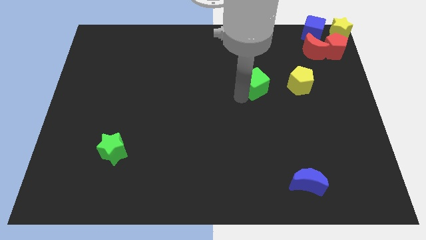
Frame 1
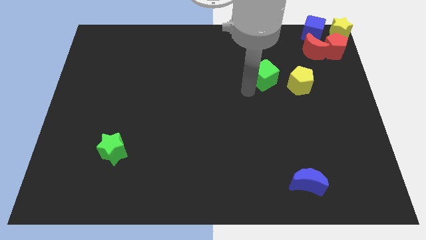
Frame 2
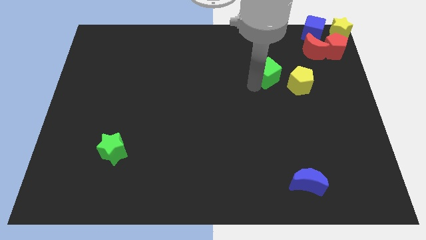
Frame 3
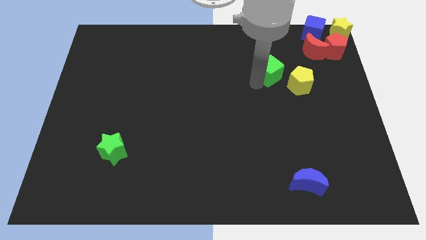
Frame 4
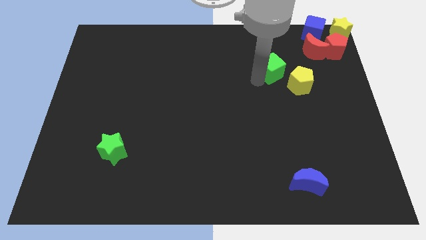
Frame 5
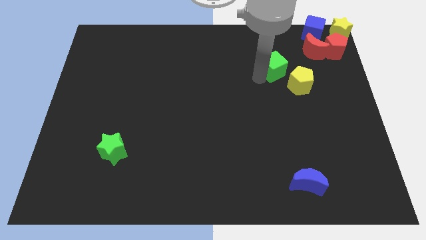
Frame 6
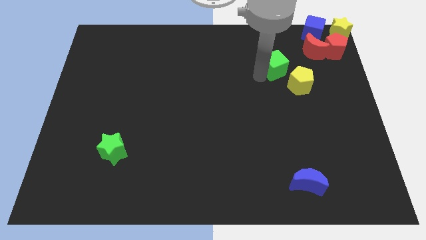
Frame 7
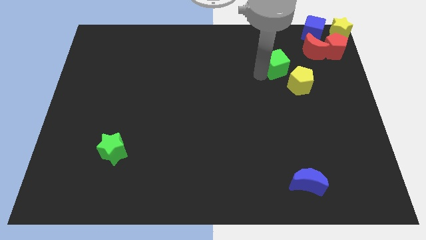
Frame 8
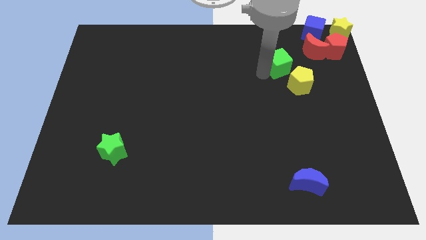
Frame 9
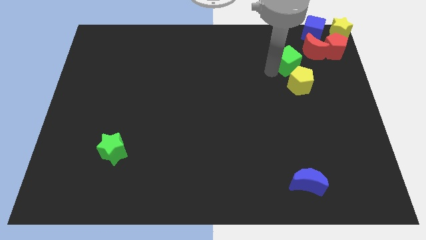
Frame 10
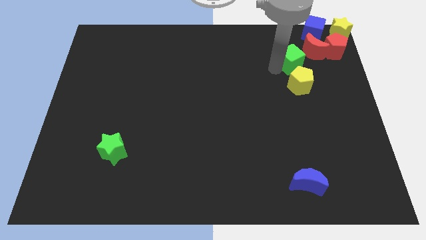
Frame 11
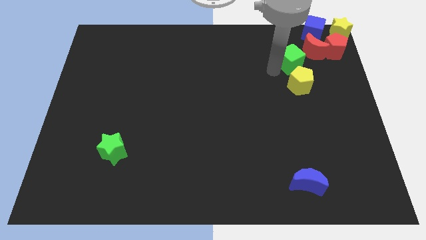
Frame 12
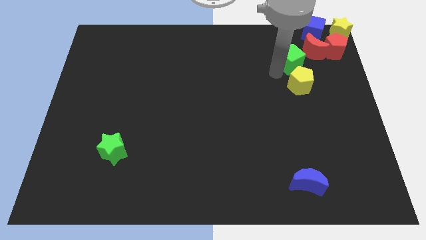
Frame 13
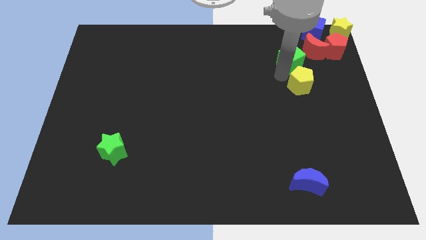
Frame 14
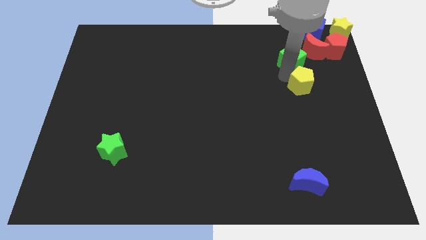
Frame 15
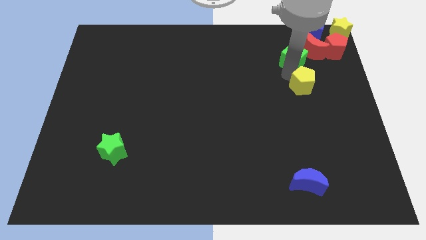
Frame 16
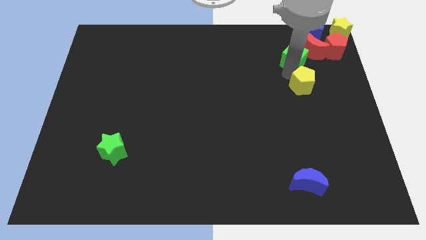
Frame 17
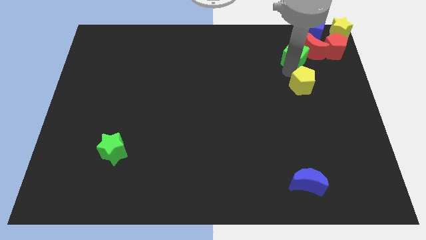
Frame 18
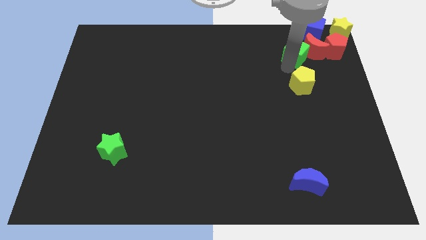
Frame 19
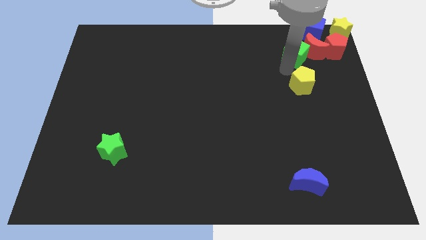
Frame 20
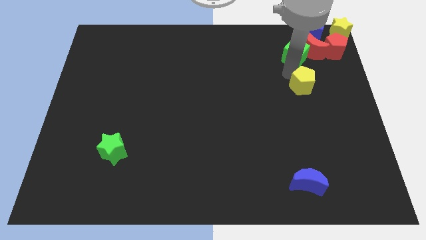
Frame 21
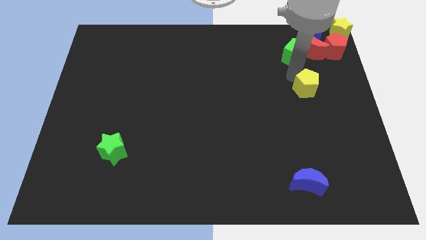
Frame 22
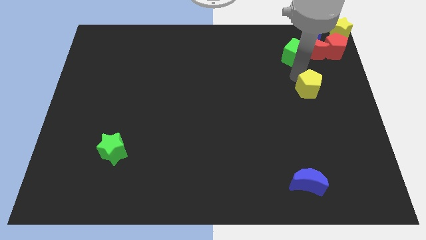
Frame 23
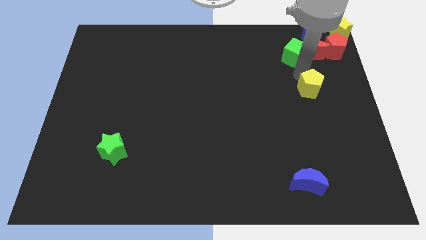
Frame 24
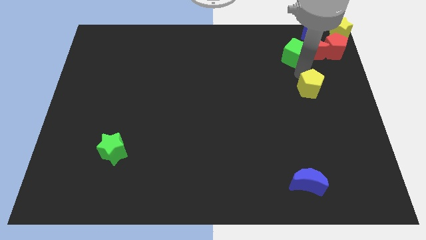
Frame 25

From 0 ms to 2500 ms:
move the green cube below to the red moon

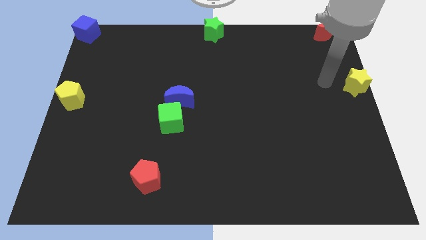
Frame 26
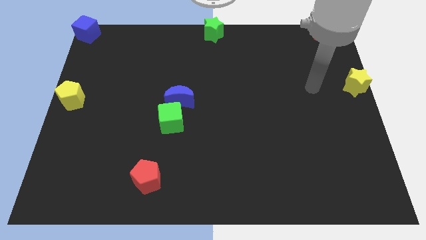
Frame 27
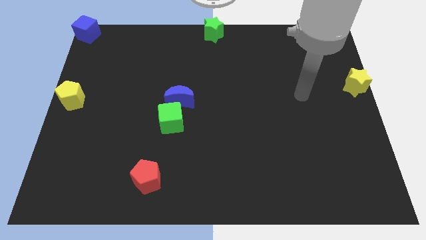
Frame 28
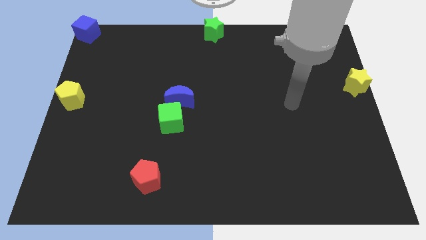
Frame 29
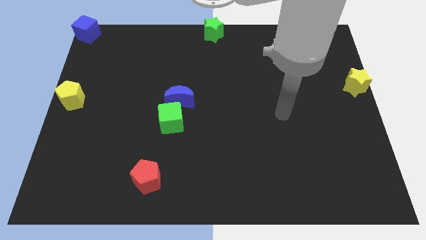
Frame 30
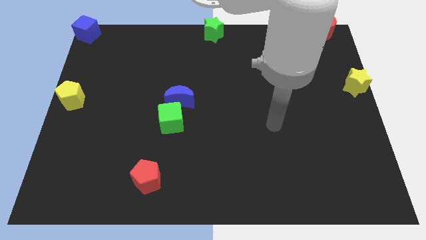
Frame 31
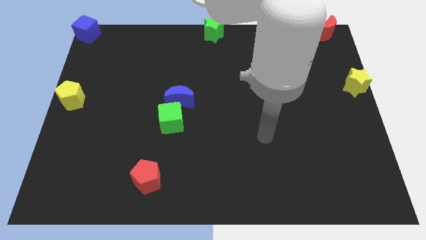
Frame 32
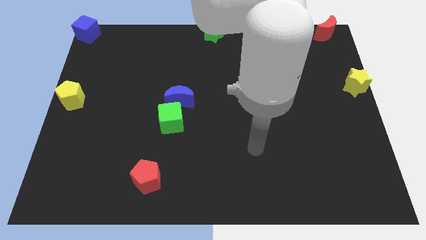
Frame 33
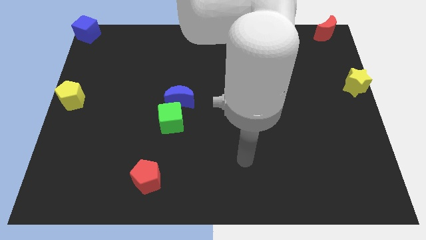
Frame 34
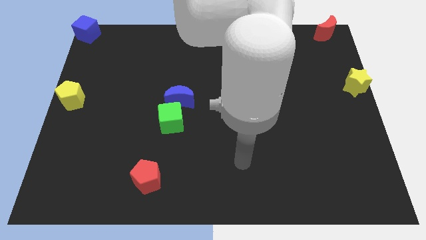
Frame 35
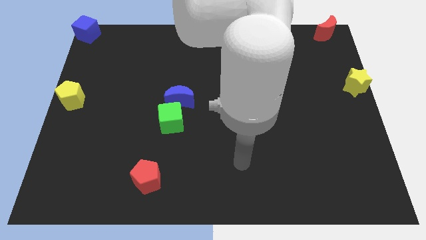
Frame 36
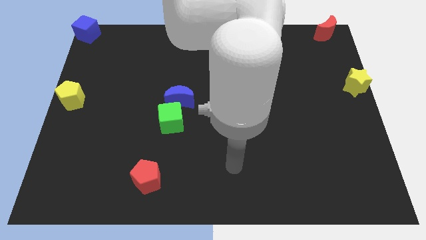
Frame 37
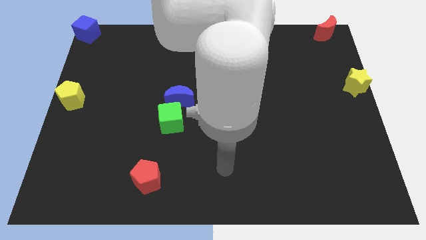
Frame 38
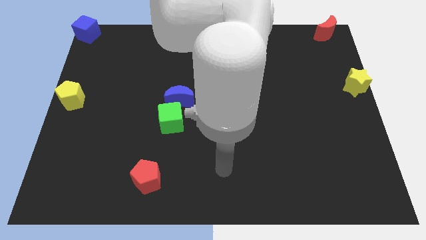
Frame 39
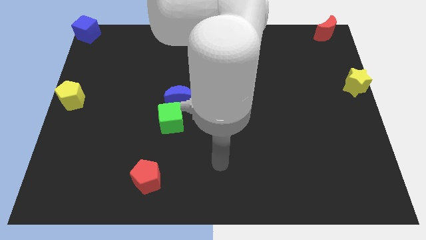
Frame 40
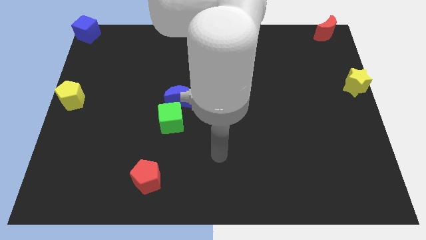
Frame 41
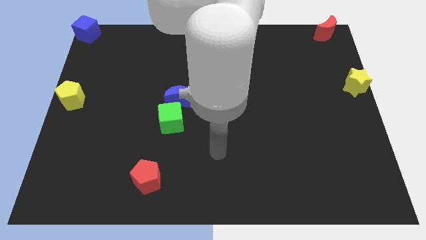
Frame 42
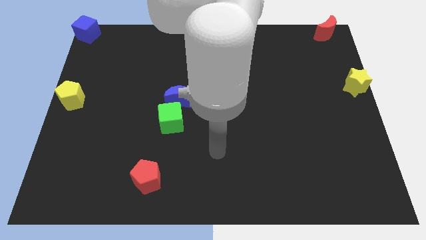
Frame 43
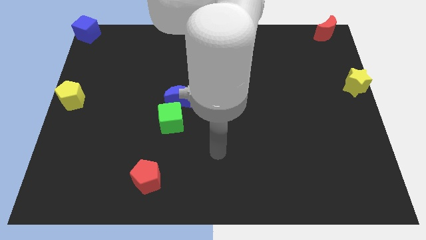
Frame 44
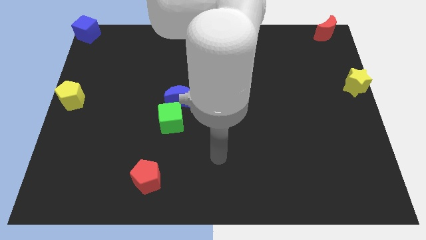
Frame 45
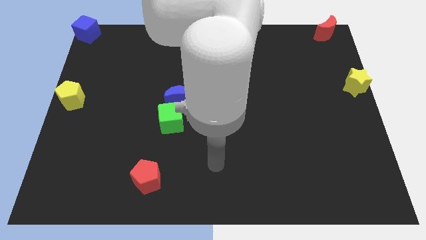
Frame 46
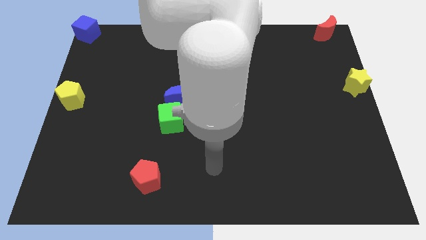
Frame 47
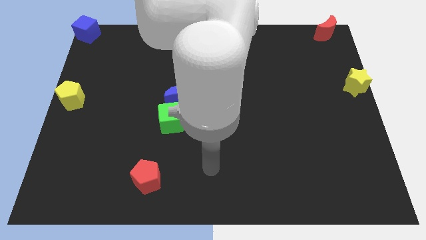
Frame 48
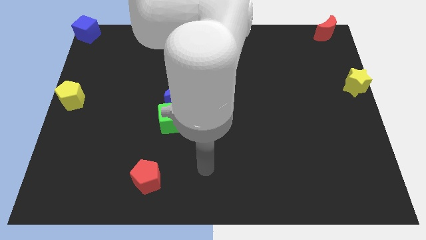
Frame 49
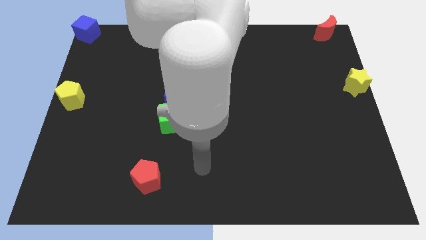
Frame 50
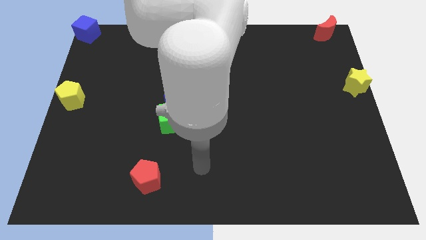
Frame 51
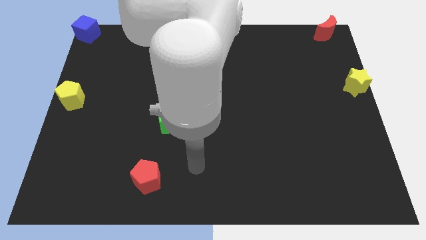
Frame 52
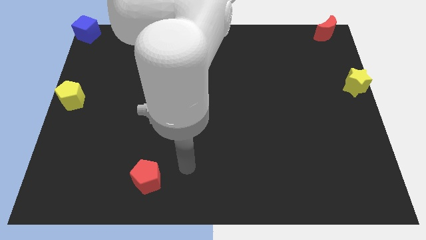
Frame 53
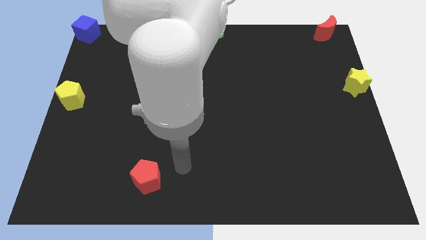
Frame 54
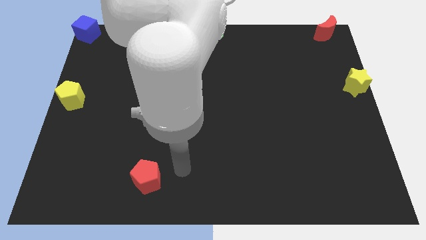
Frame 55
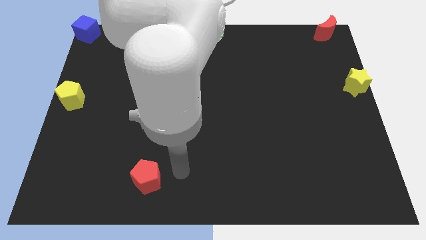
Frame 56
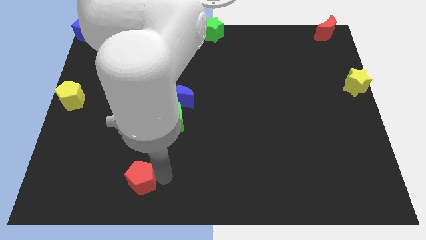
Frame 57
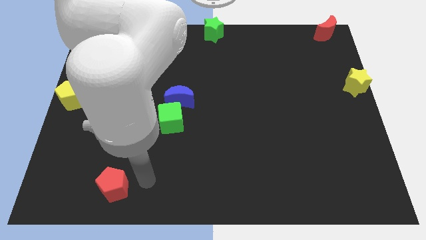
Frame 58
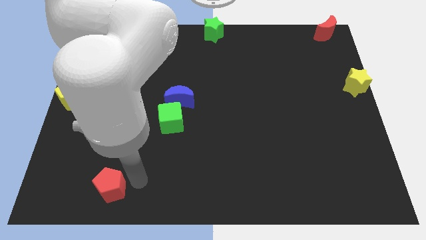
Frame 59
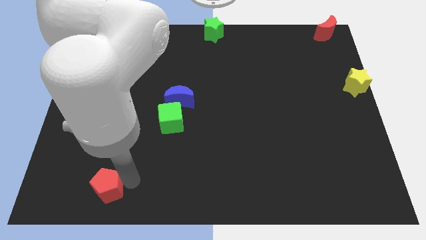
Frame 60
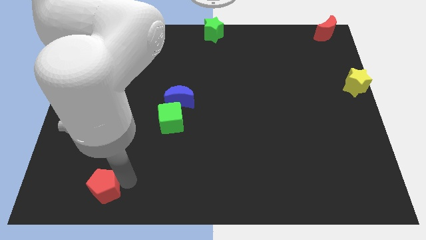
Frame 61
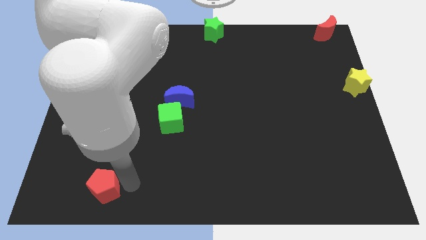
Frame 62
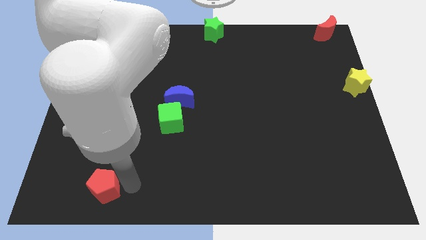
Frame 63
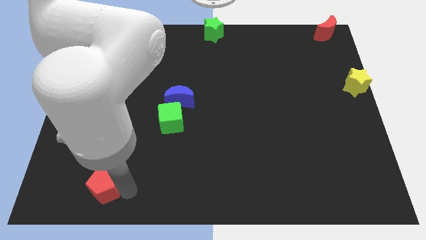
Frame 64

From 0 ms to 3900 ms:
drag the red pentagon towards the left side of the board

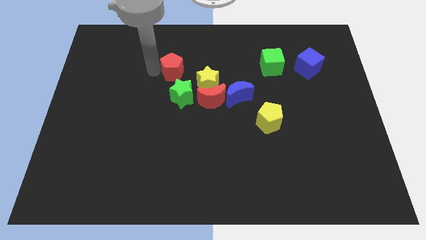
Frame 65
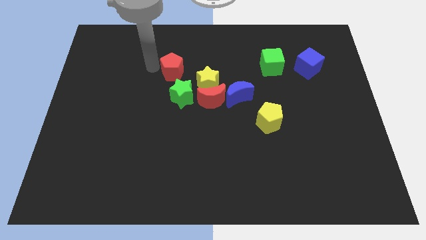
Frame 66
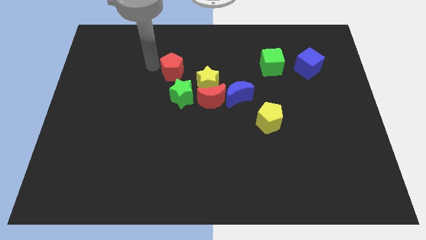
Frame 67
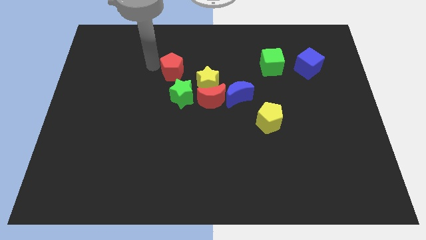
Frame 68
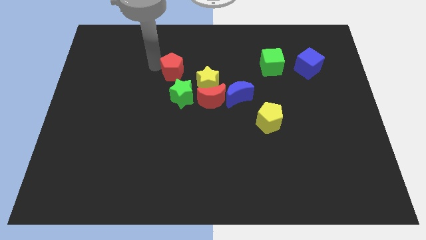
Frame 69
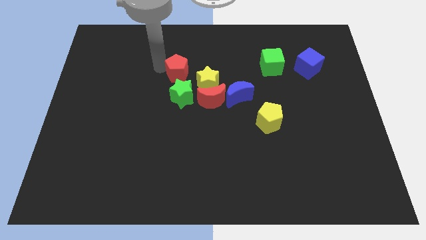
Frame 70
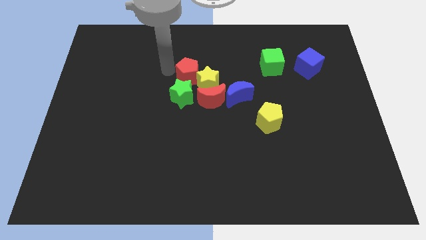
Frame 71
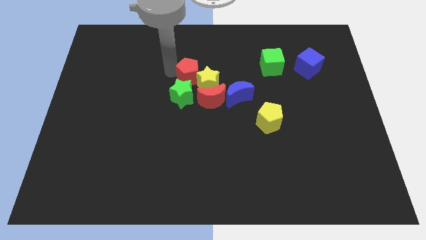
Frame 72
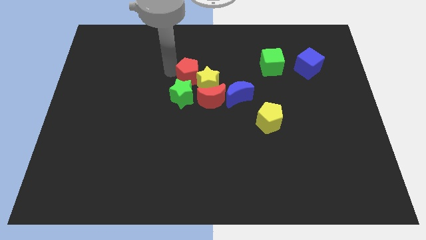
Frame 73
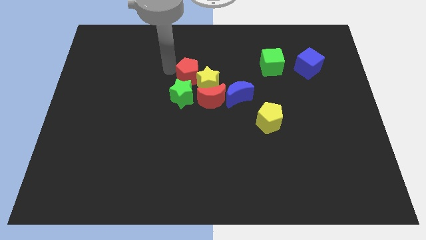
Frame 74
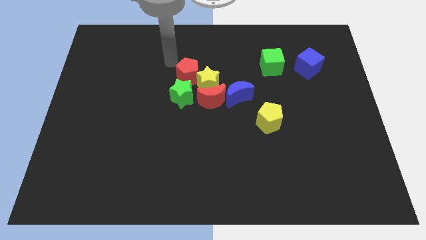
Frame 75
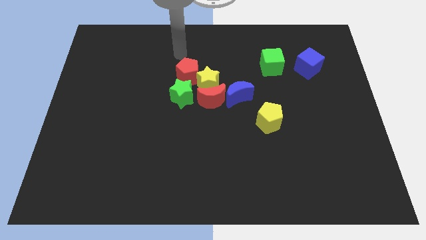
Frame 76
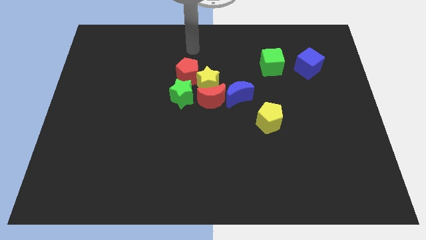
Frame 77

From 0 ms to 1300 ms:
push the red pentagon into the yellow star

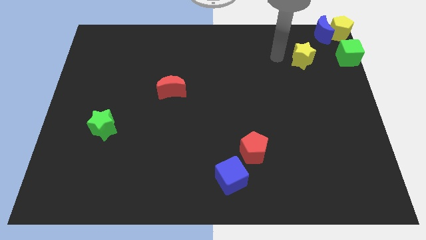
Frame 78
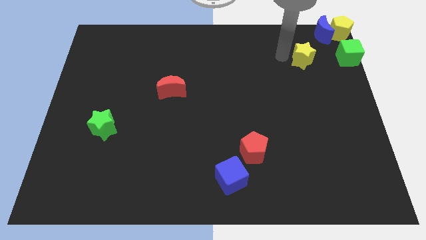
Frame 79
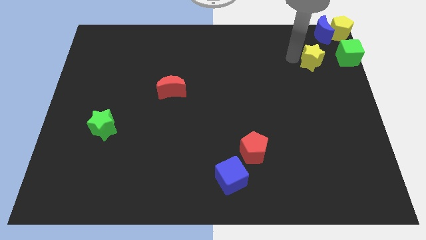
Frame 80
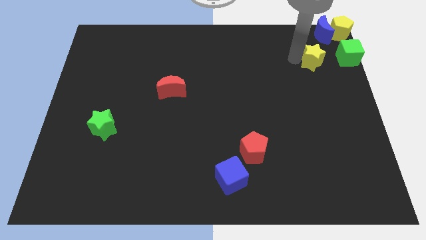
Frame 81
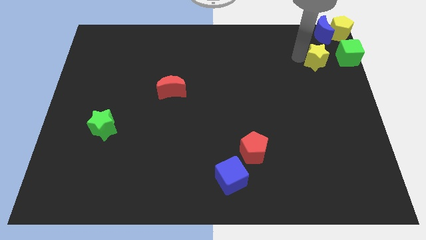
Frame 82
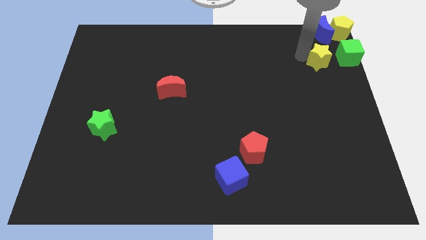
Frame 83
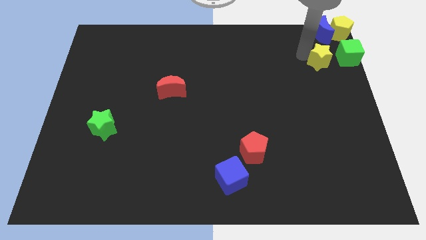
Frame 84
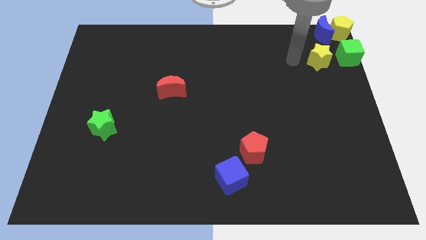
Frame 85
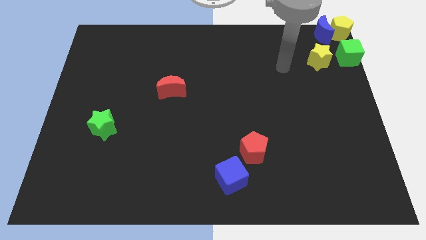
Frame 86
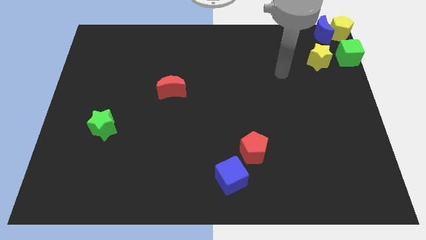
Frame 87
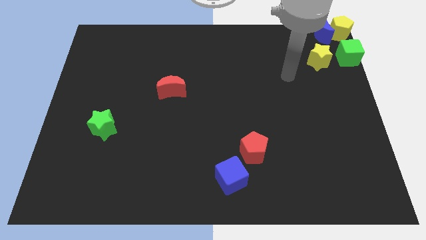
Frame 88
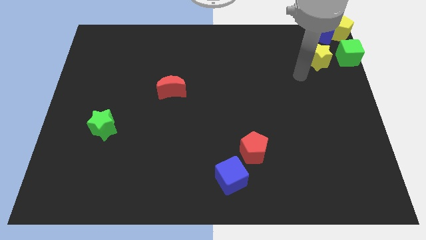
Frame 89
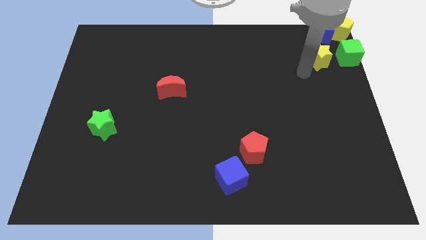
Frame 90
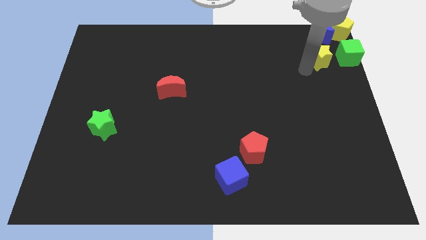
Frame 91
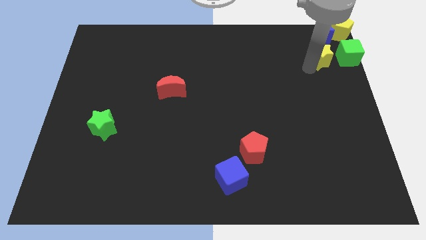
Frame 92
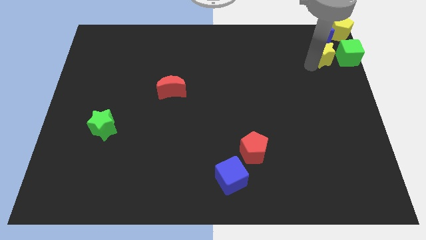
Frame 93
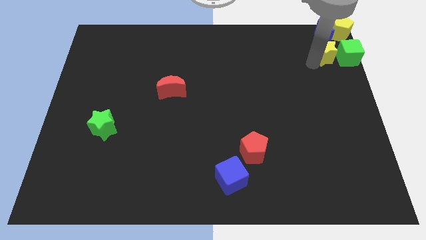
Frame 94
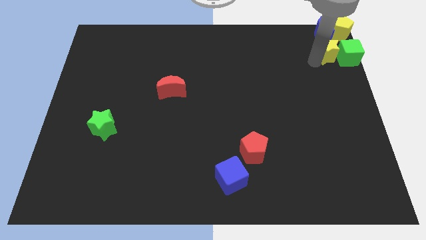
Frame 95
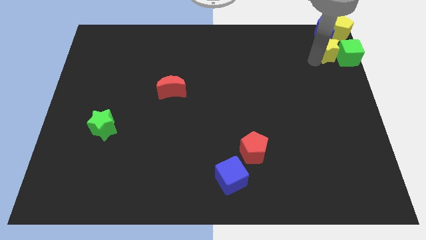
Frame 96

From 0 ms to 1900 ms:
move yellow star into the group of blocks
